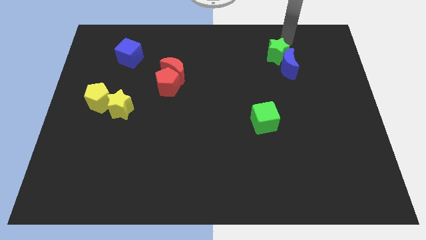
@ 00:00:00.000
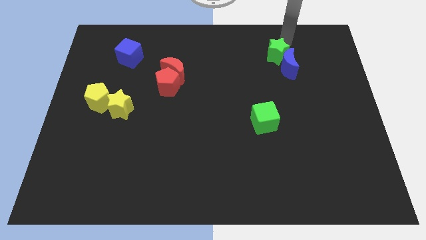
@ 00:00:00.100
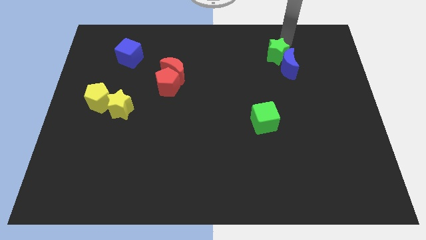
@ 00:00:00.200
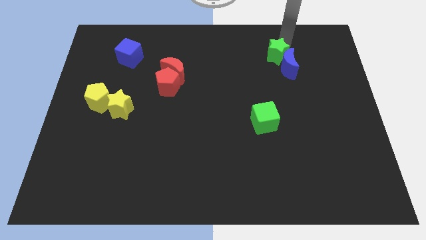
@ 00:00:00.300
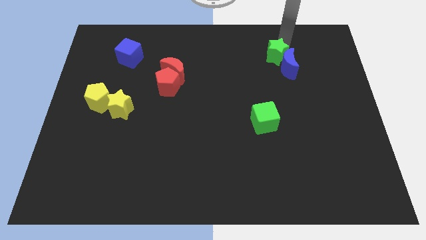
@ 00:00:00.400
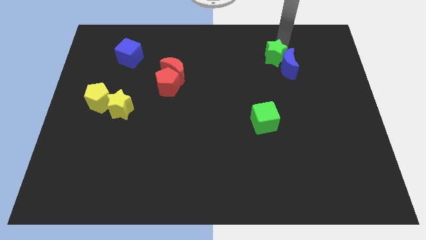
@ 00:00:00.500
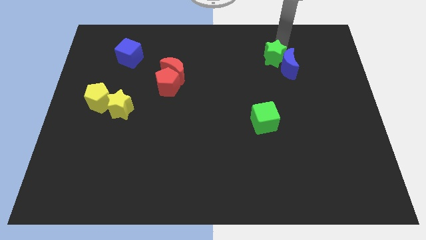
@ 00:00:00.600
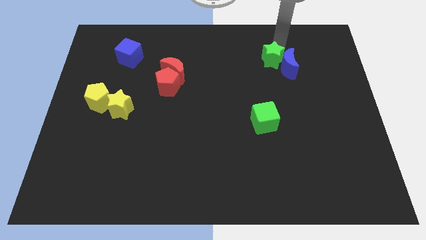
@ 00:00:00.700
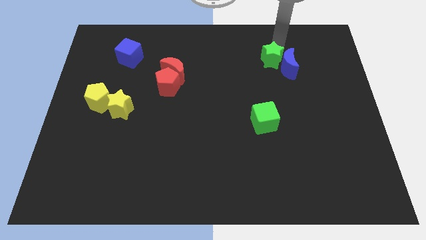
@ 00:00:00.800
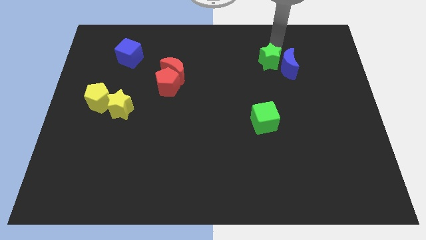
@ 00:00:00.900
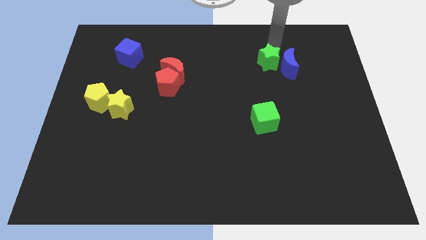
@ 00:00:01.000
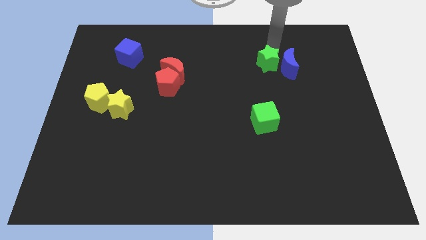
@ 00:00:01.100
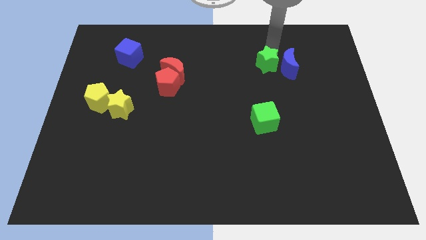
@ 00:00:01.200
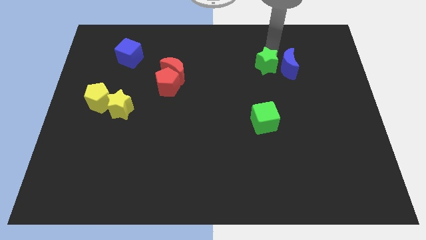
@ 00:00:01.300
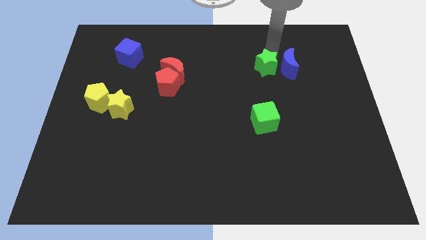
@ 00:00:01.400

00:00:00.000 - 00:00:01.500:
place green star to the left of blue crescent

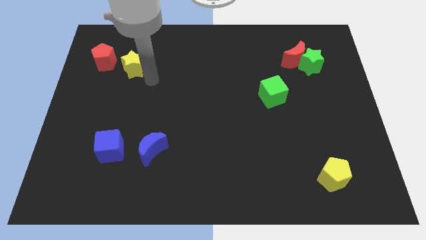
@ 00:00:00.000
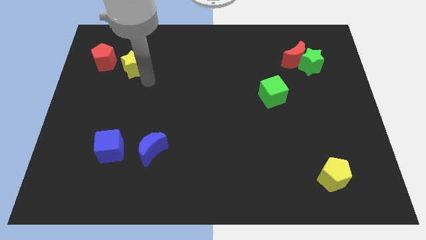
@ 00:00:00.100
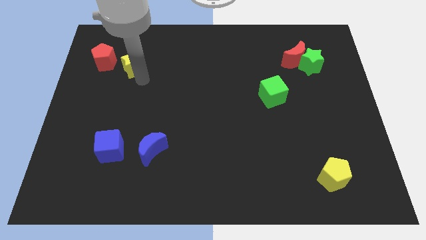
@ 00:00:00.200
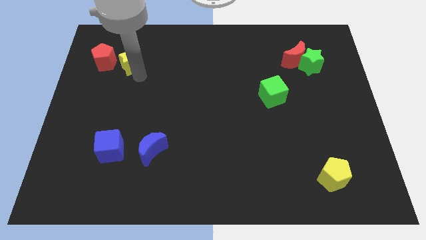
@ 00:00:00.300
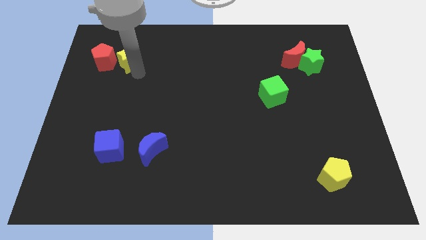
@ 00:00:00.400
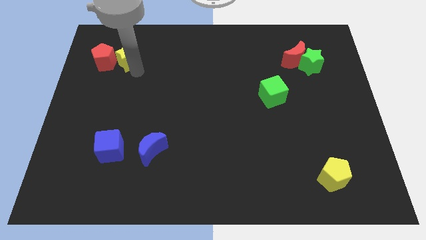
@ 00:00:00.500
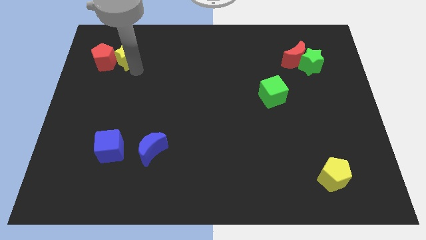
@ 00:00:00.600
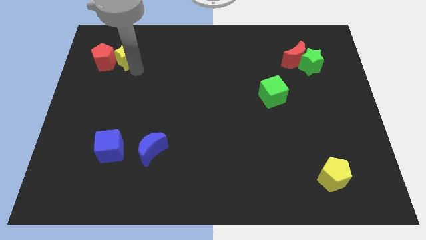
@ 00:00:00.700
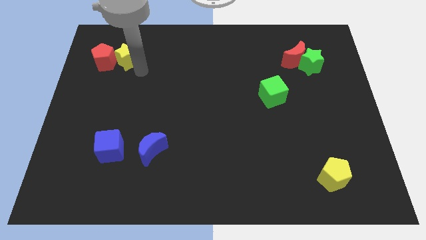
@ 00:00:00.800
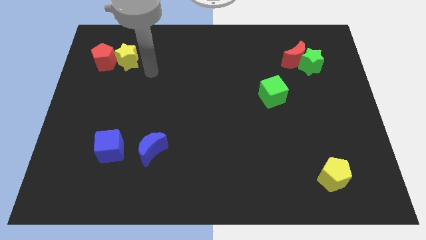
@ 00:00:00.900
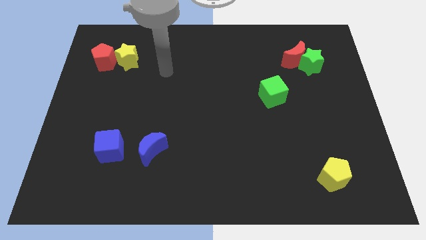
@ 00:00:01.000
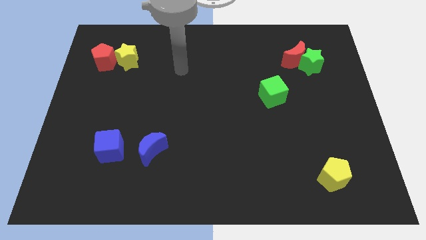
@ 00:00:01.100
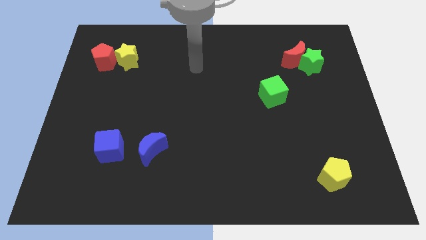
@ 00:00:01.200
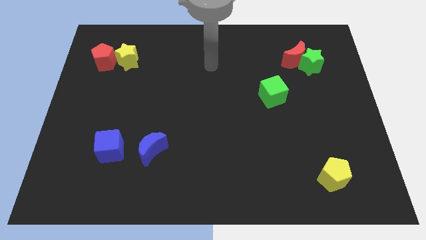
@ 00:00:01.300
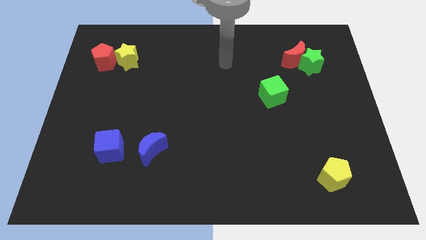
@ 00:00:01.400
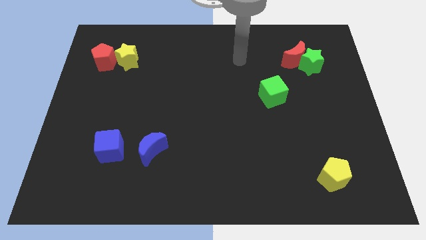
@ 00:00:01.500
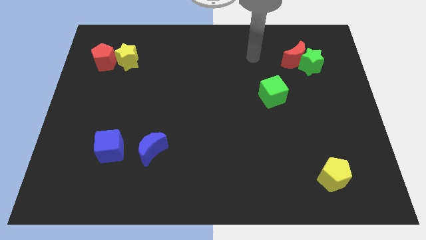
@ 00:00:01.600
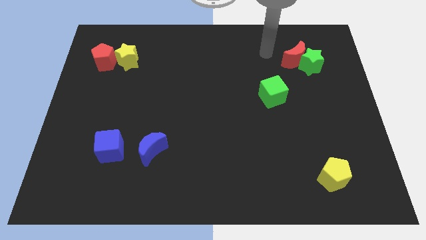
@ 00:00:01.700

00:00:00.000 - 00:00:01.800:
attach the yellow star to the red pentagon

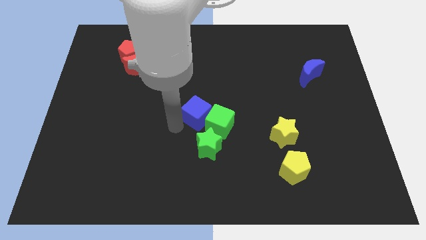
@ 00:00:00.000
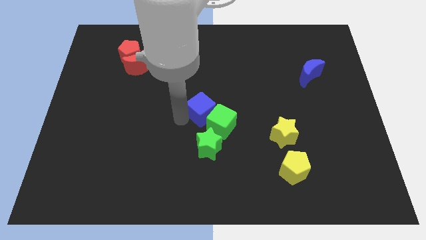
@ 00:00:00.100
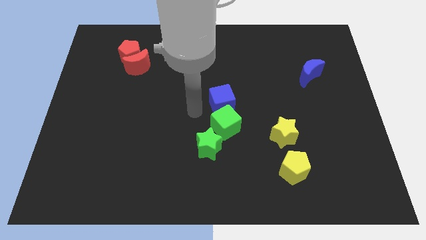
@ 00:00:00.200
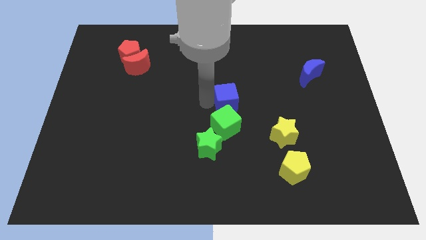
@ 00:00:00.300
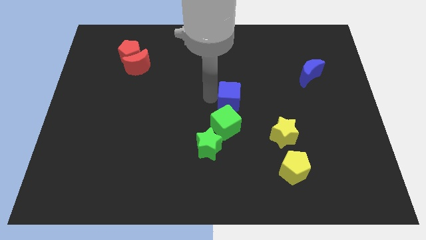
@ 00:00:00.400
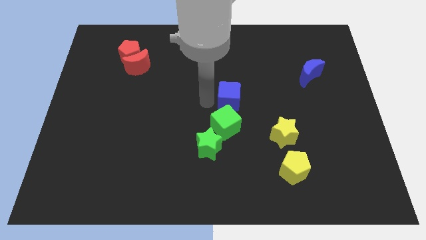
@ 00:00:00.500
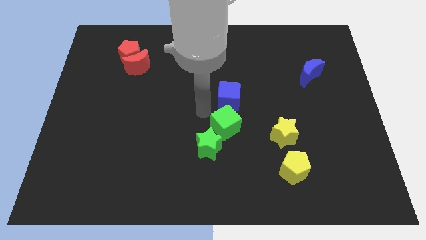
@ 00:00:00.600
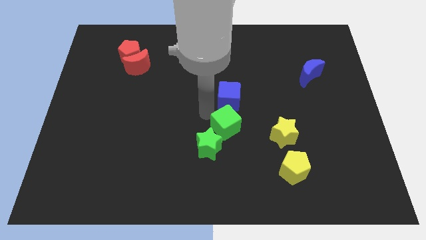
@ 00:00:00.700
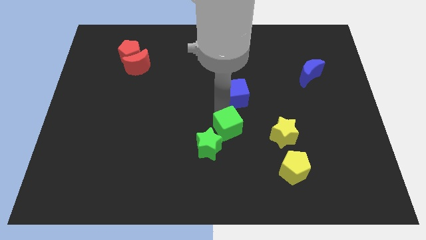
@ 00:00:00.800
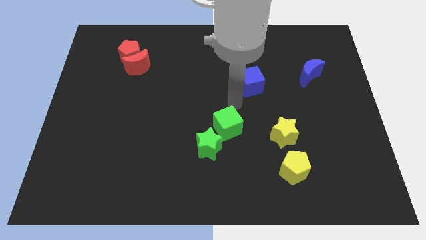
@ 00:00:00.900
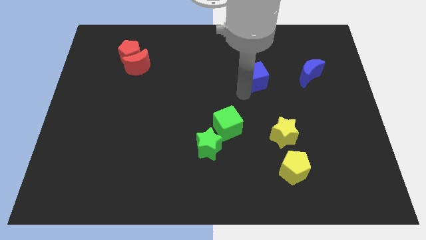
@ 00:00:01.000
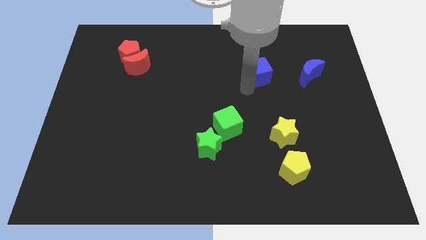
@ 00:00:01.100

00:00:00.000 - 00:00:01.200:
place the blue cube above the green cube

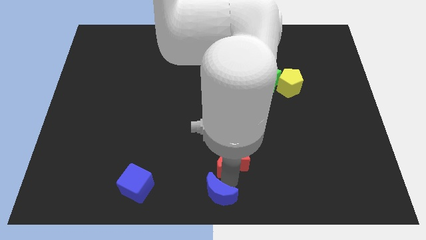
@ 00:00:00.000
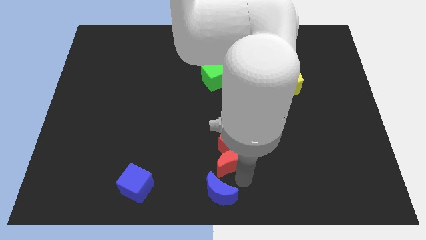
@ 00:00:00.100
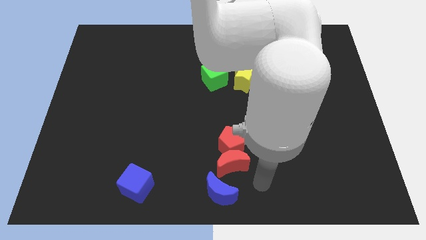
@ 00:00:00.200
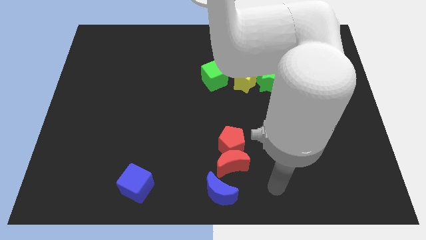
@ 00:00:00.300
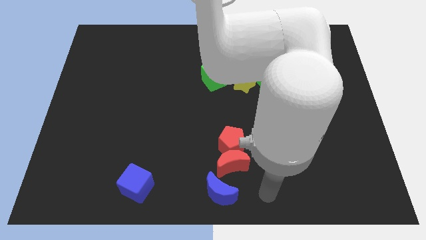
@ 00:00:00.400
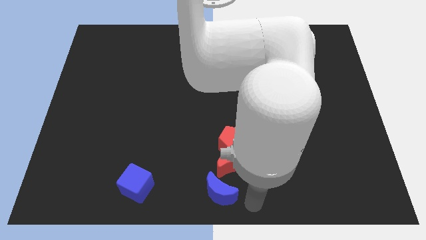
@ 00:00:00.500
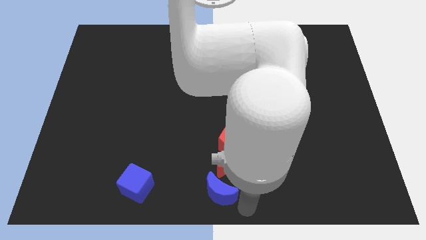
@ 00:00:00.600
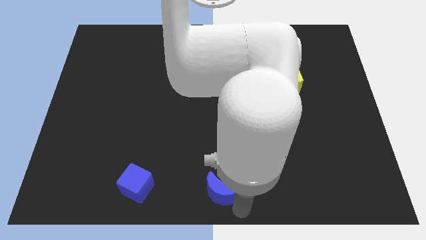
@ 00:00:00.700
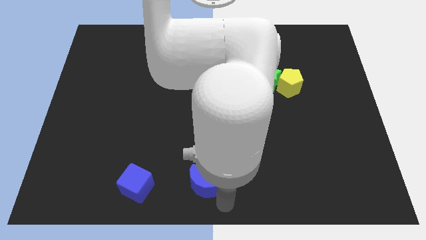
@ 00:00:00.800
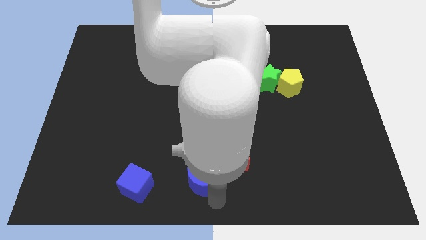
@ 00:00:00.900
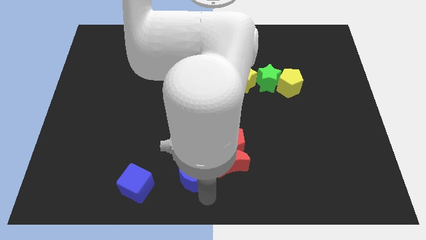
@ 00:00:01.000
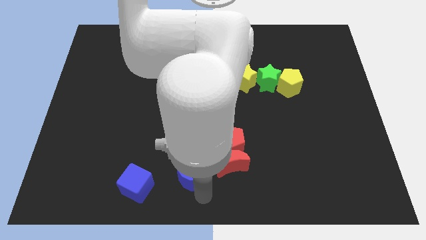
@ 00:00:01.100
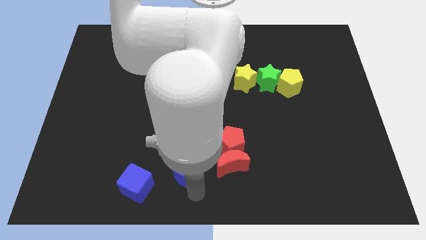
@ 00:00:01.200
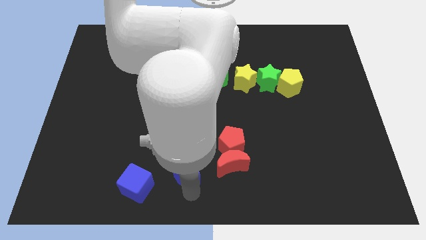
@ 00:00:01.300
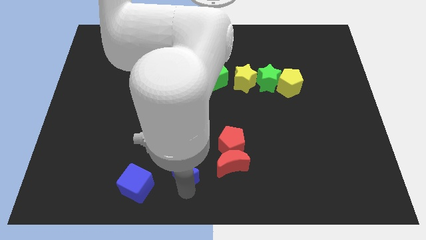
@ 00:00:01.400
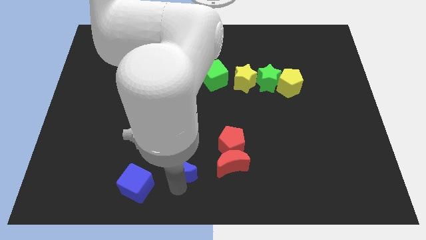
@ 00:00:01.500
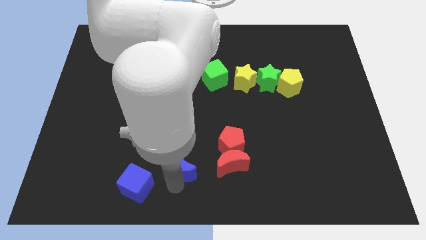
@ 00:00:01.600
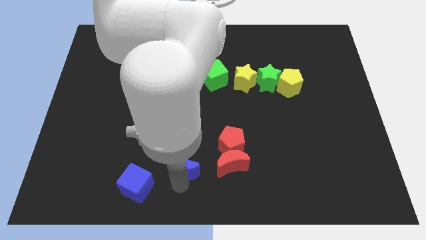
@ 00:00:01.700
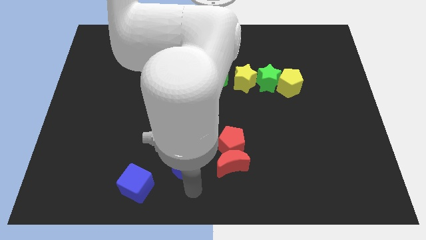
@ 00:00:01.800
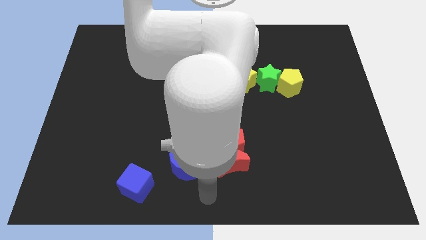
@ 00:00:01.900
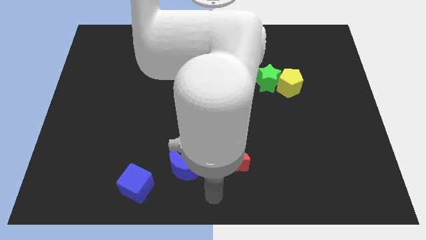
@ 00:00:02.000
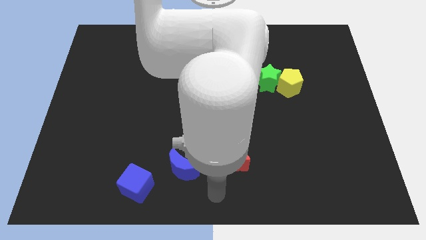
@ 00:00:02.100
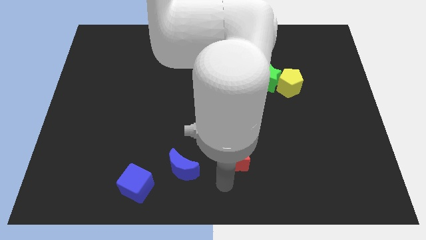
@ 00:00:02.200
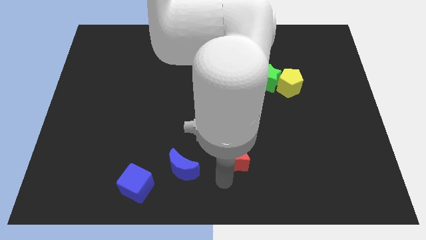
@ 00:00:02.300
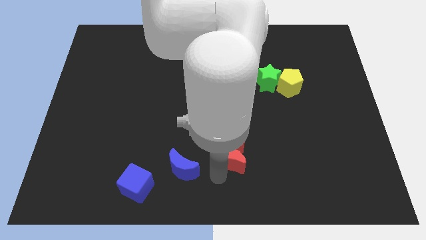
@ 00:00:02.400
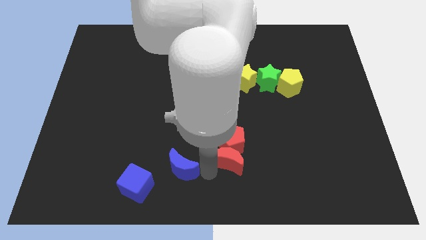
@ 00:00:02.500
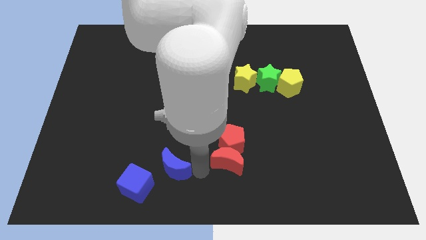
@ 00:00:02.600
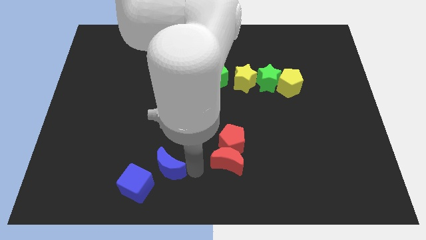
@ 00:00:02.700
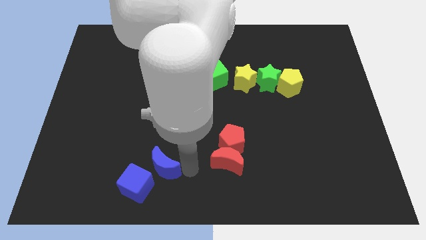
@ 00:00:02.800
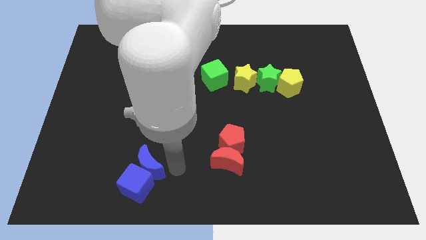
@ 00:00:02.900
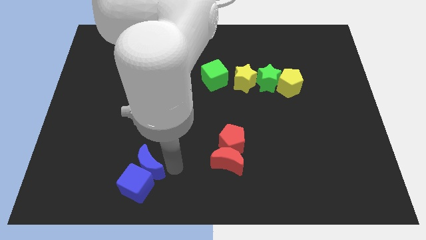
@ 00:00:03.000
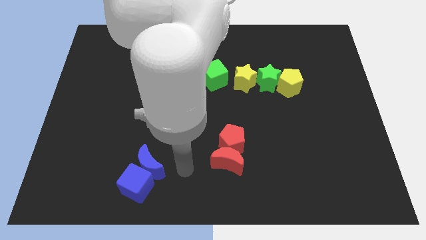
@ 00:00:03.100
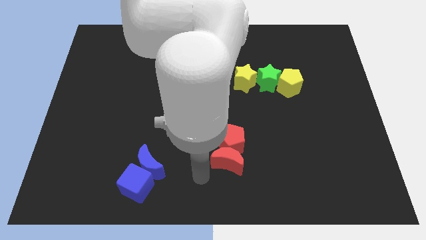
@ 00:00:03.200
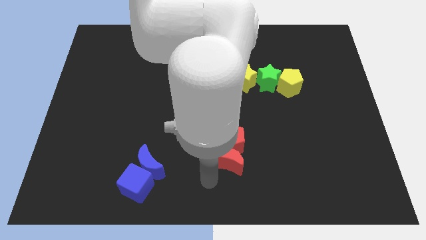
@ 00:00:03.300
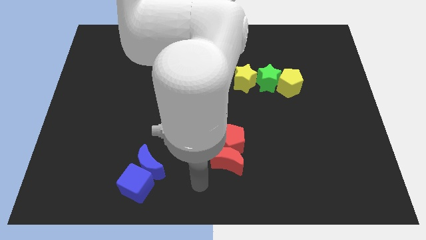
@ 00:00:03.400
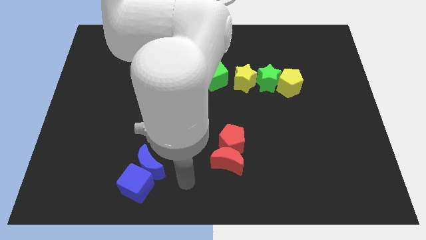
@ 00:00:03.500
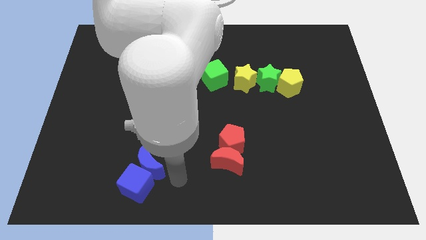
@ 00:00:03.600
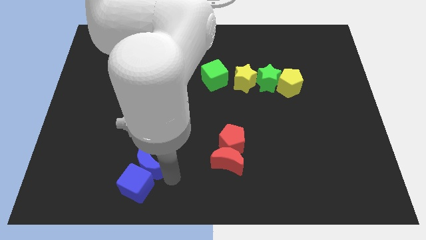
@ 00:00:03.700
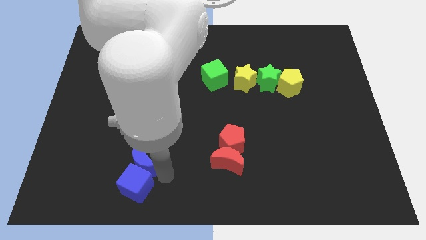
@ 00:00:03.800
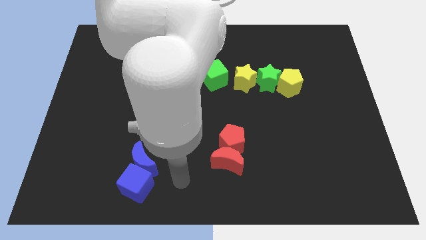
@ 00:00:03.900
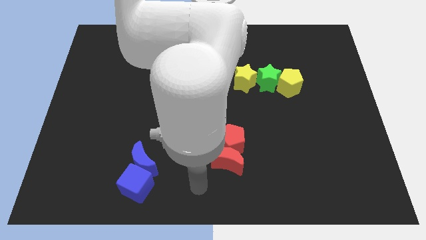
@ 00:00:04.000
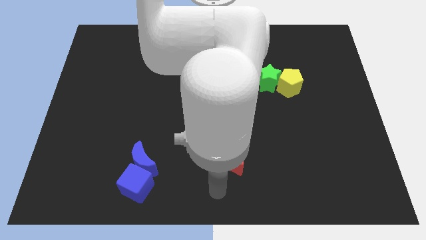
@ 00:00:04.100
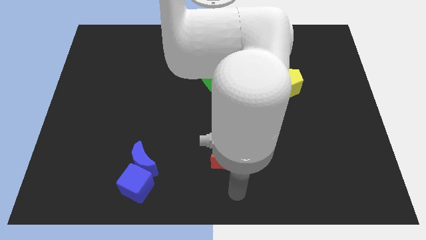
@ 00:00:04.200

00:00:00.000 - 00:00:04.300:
separate blue moon from the red moon

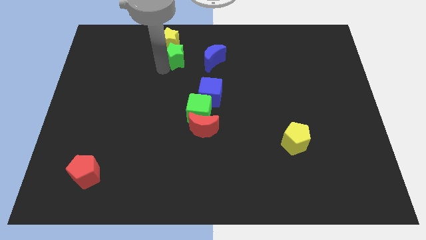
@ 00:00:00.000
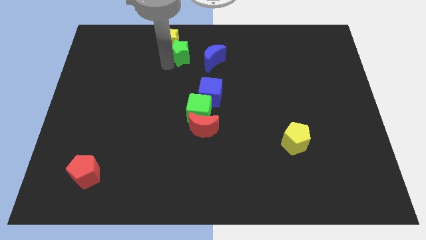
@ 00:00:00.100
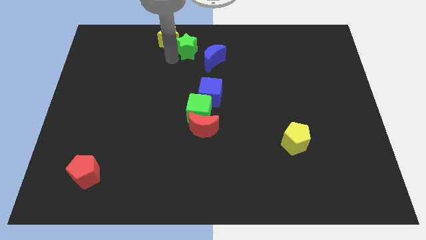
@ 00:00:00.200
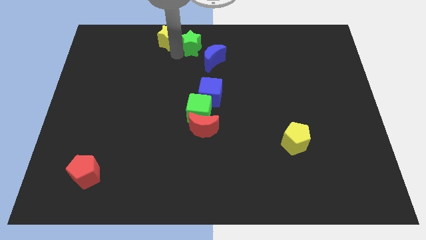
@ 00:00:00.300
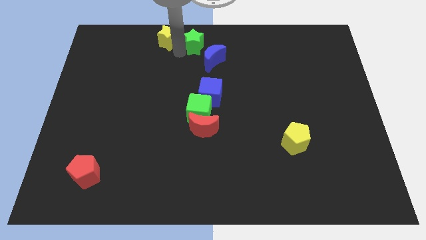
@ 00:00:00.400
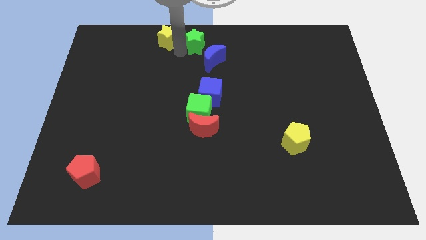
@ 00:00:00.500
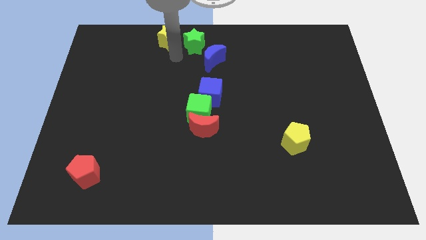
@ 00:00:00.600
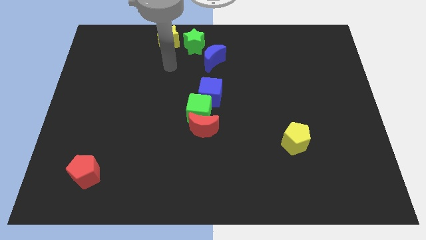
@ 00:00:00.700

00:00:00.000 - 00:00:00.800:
push the green star to the right of the yellow star
